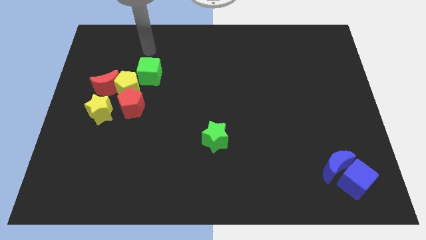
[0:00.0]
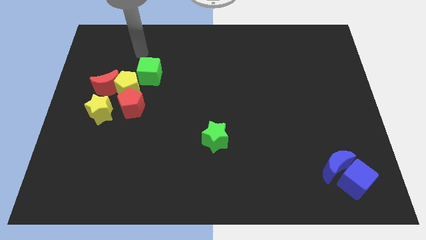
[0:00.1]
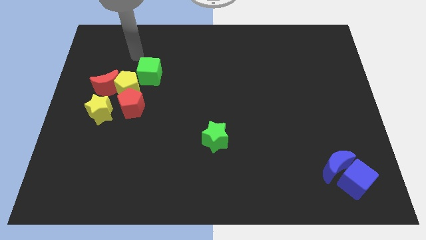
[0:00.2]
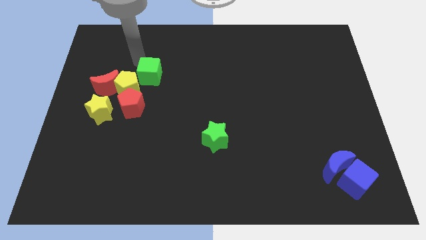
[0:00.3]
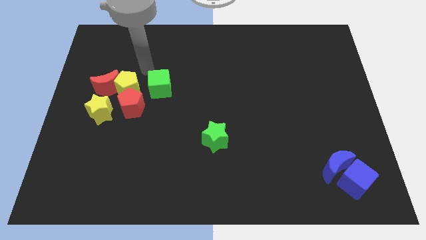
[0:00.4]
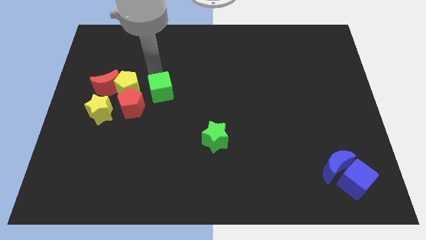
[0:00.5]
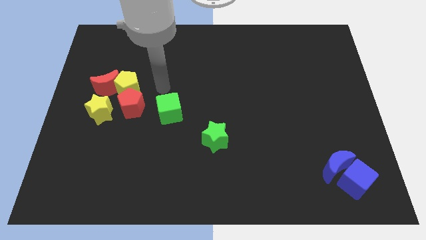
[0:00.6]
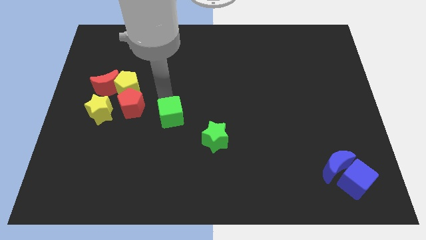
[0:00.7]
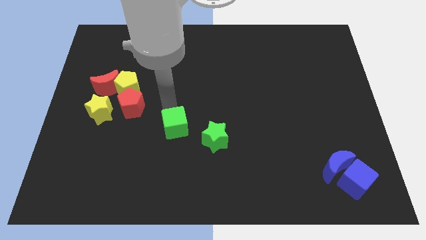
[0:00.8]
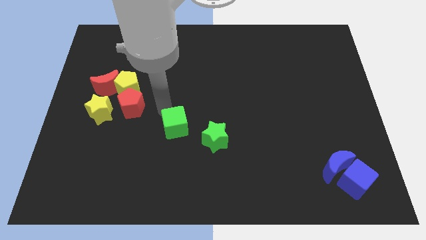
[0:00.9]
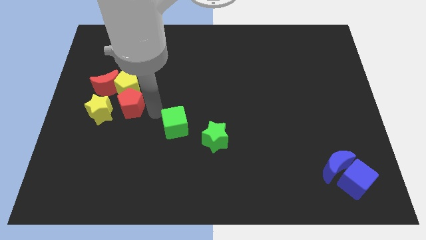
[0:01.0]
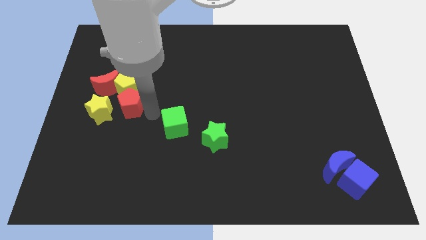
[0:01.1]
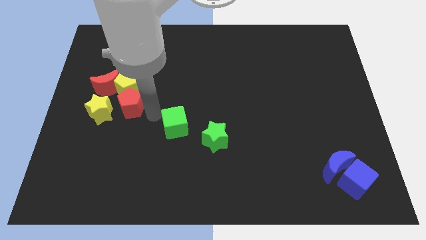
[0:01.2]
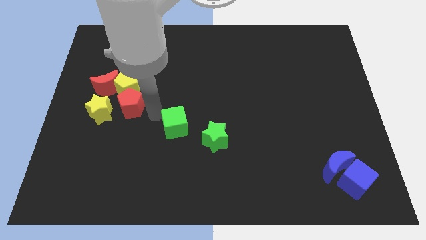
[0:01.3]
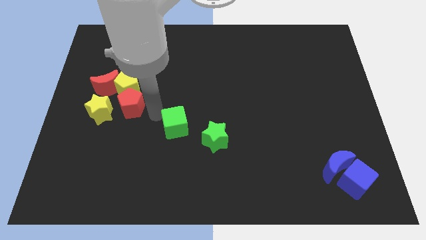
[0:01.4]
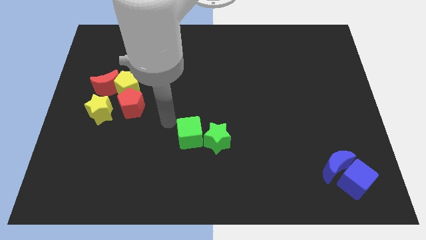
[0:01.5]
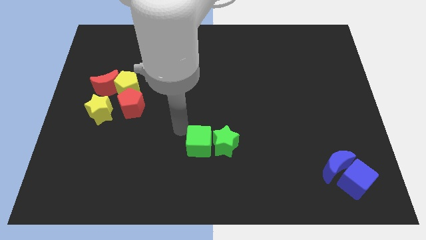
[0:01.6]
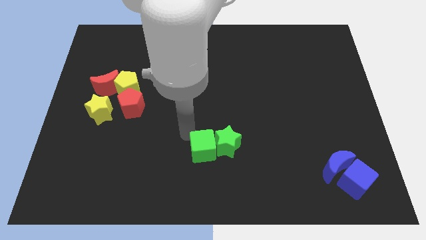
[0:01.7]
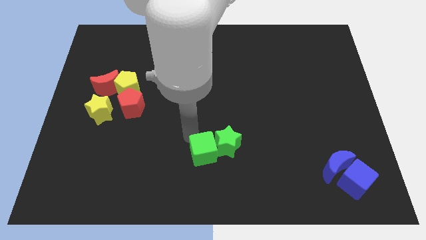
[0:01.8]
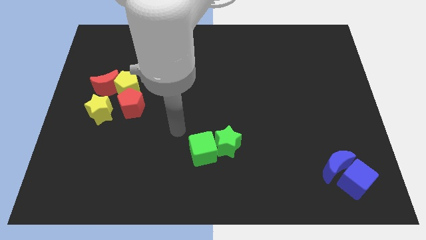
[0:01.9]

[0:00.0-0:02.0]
push green cube into the green star

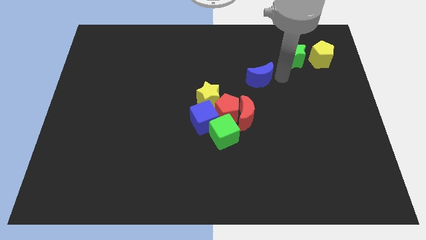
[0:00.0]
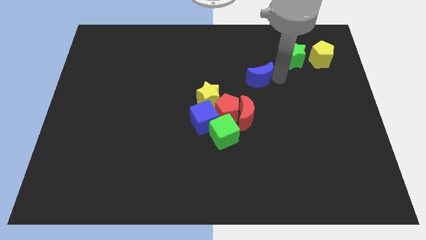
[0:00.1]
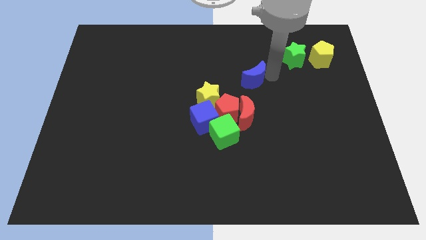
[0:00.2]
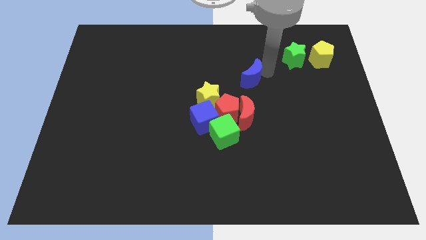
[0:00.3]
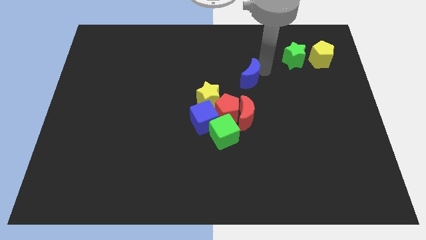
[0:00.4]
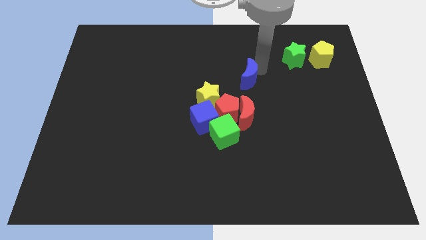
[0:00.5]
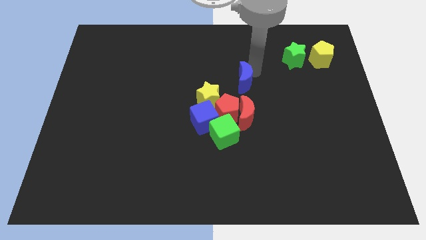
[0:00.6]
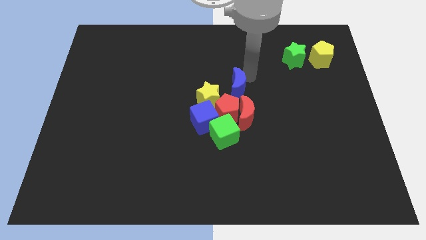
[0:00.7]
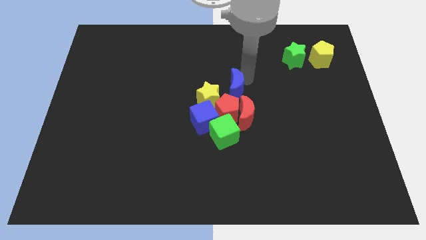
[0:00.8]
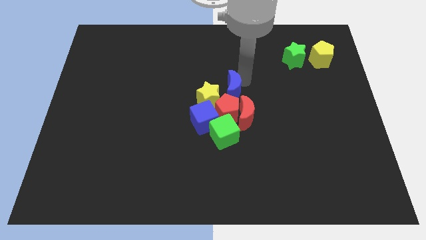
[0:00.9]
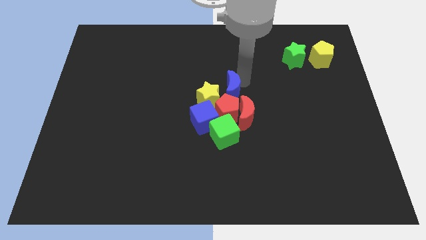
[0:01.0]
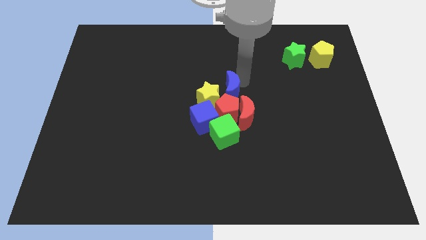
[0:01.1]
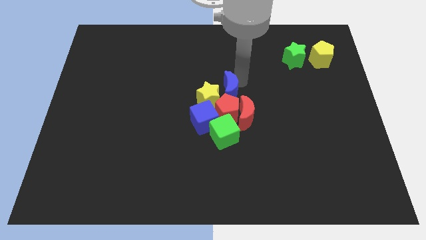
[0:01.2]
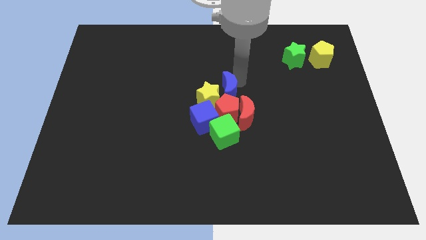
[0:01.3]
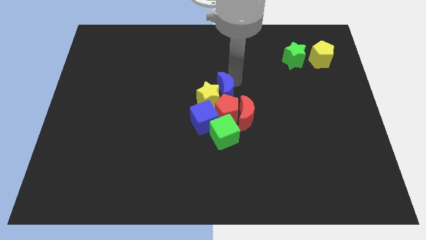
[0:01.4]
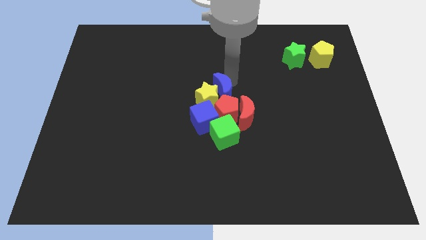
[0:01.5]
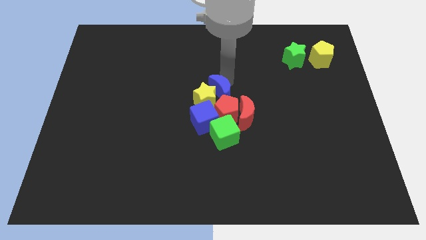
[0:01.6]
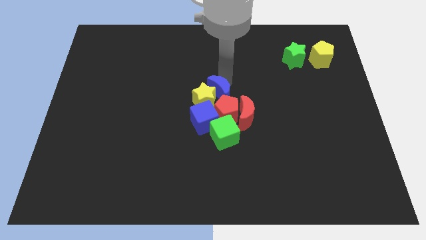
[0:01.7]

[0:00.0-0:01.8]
move the blue crescent towards the group of blocks to the center

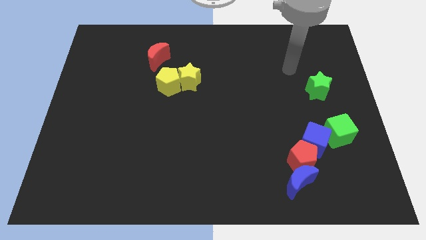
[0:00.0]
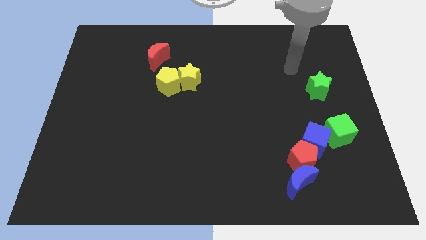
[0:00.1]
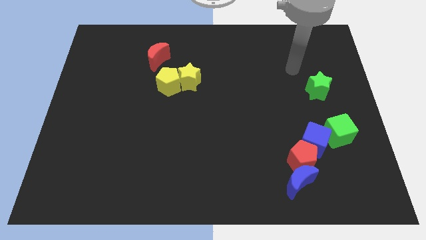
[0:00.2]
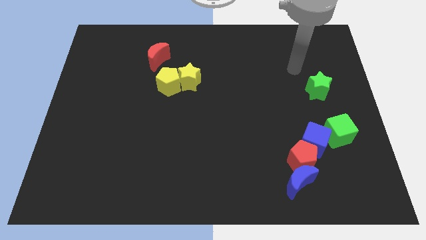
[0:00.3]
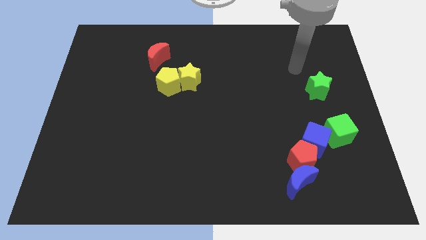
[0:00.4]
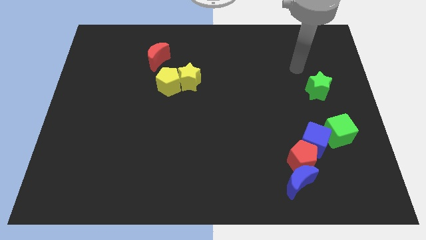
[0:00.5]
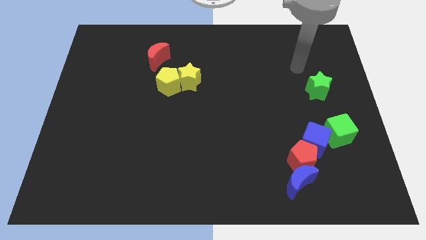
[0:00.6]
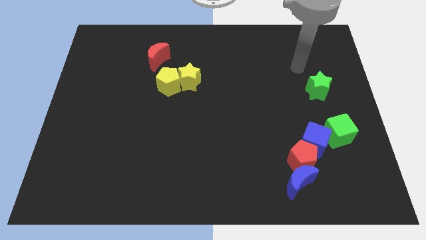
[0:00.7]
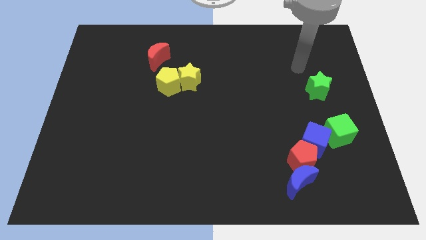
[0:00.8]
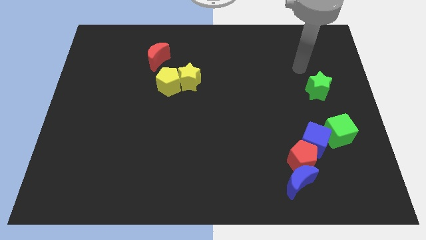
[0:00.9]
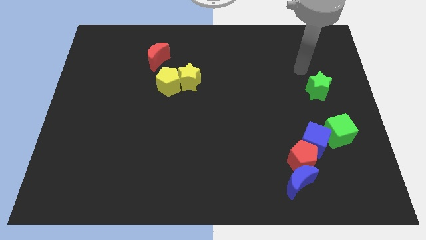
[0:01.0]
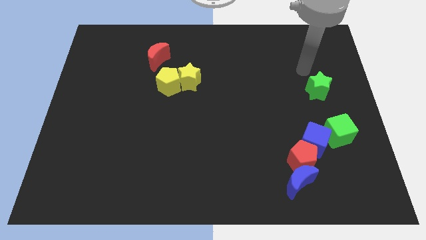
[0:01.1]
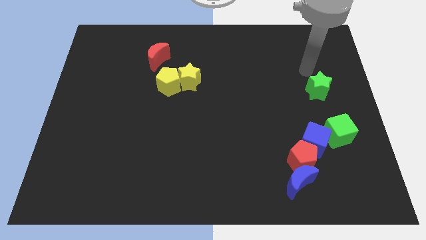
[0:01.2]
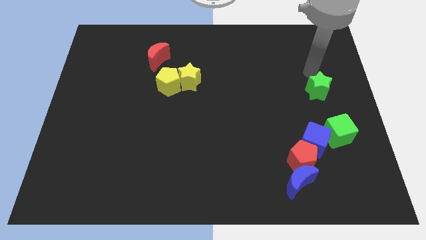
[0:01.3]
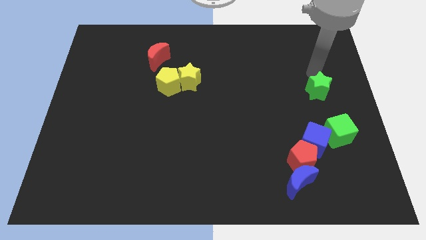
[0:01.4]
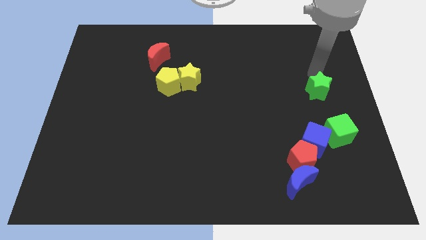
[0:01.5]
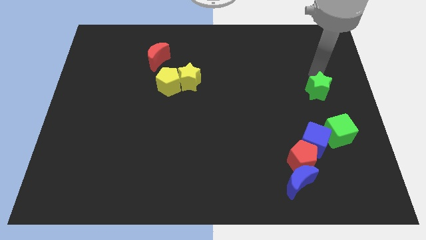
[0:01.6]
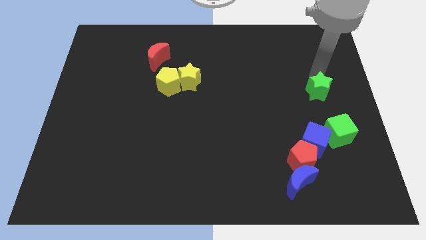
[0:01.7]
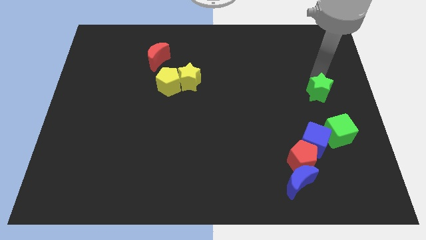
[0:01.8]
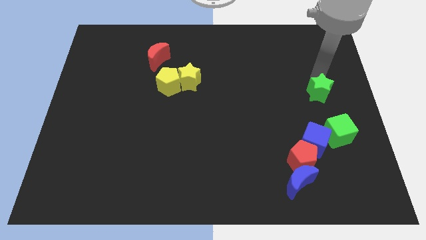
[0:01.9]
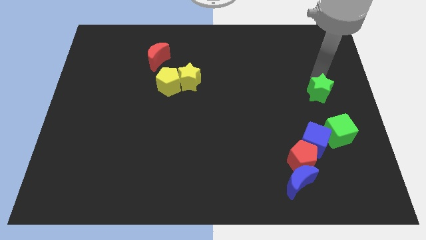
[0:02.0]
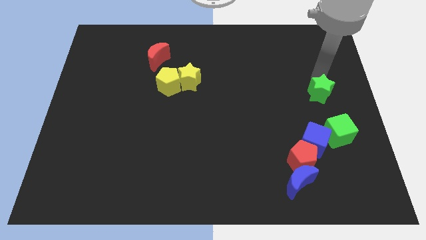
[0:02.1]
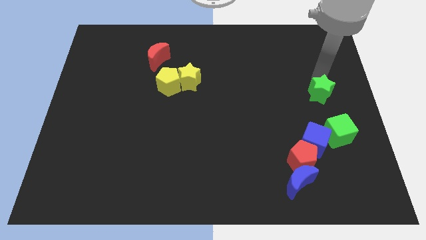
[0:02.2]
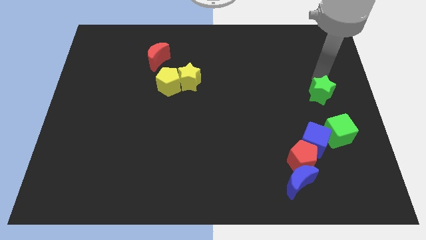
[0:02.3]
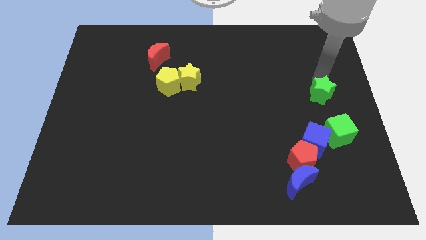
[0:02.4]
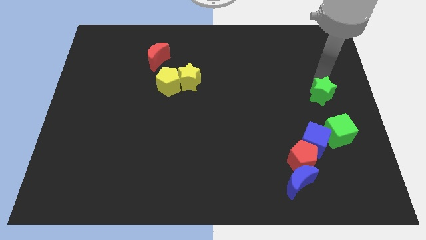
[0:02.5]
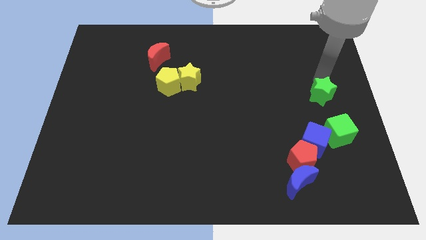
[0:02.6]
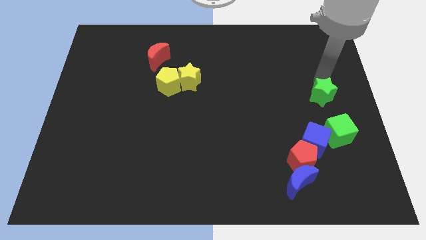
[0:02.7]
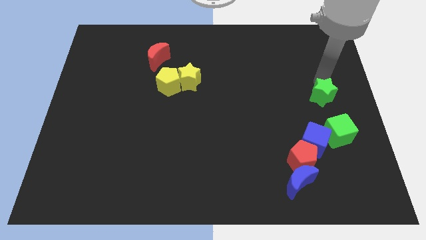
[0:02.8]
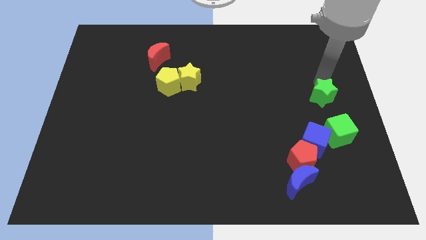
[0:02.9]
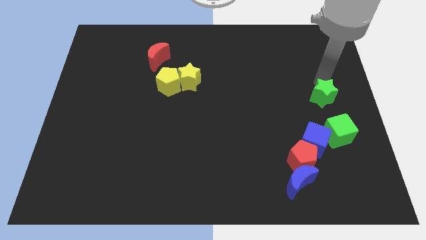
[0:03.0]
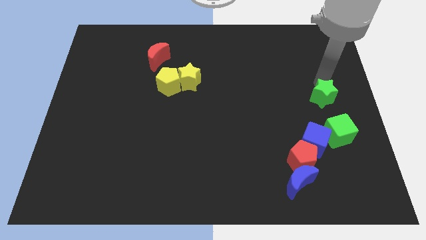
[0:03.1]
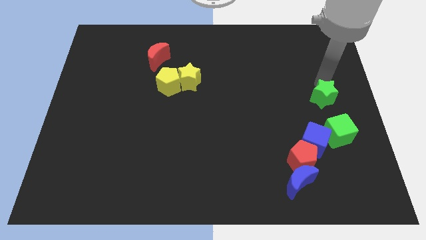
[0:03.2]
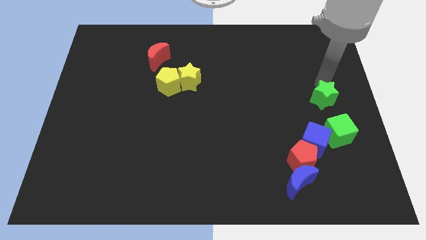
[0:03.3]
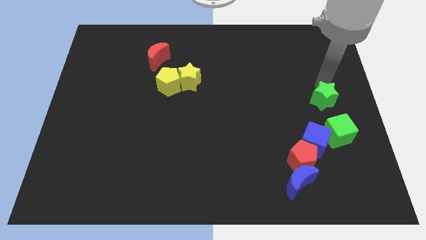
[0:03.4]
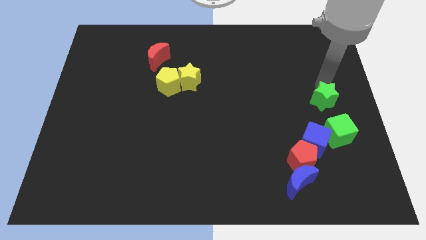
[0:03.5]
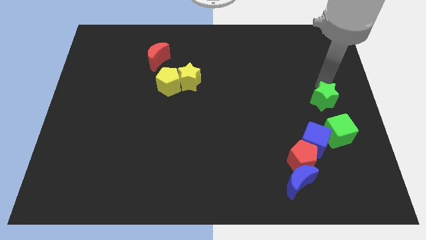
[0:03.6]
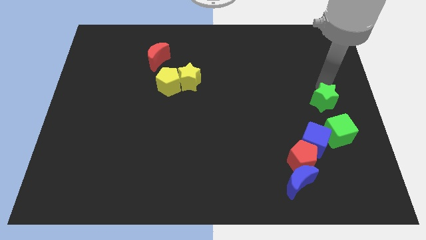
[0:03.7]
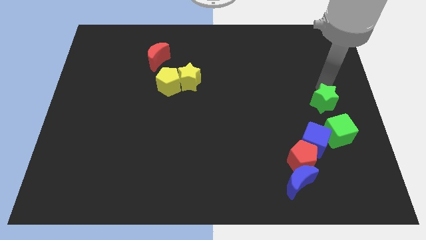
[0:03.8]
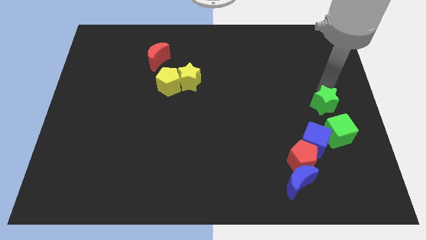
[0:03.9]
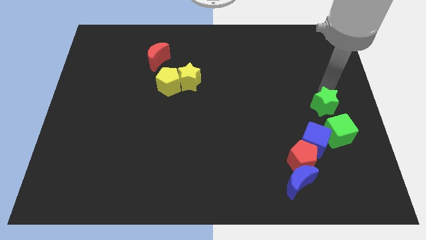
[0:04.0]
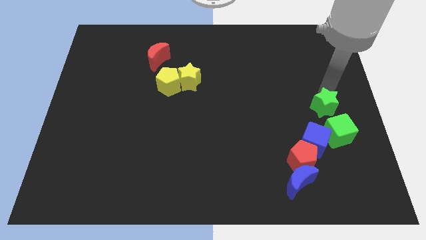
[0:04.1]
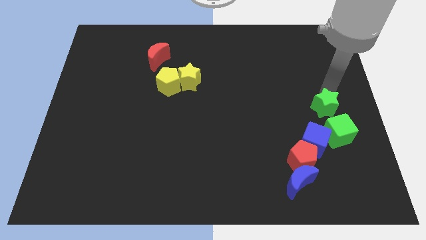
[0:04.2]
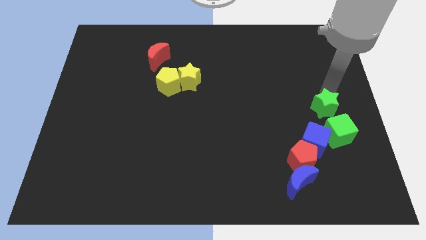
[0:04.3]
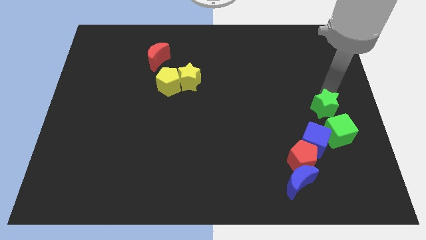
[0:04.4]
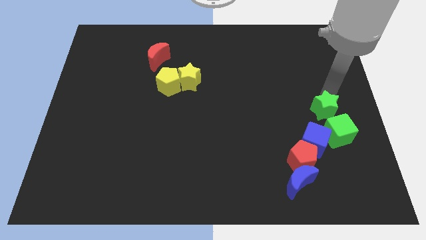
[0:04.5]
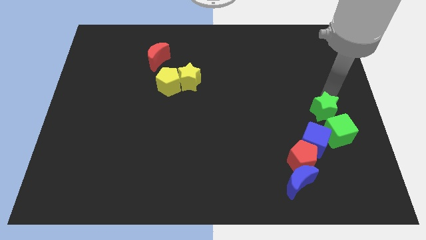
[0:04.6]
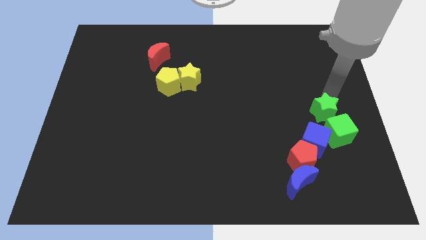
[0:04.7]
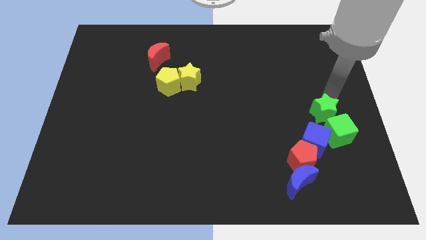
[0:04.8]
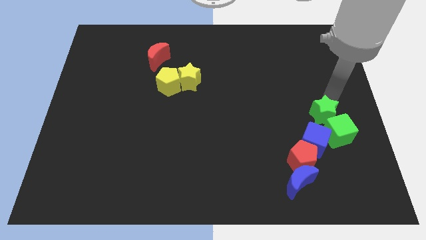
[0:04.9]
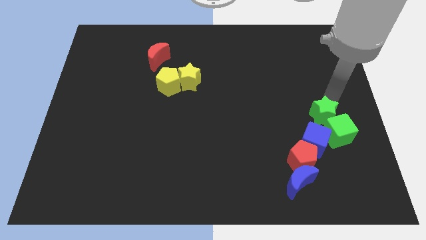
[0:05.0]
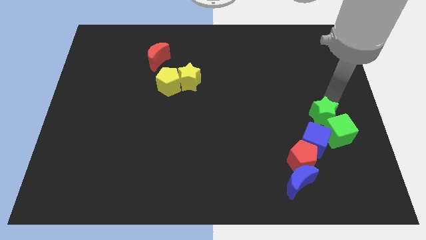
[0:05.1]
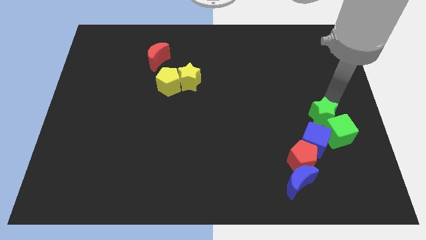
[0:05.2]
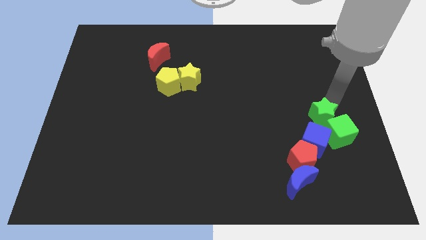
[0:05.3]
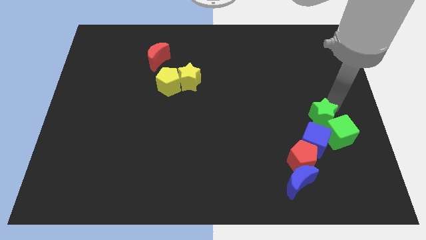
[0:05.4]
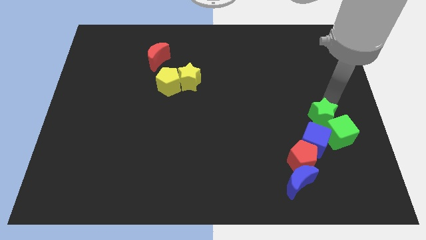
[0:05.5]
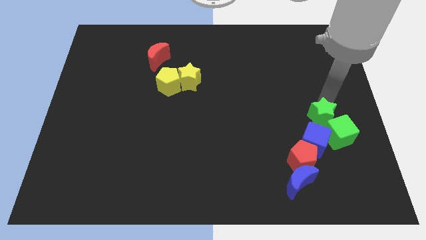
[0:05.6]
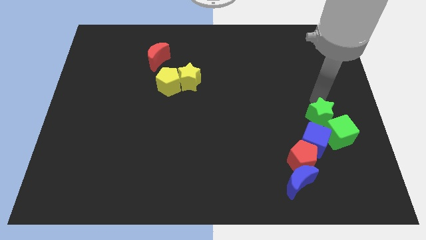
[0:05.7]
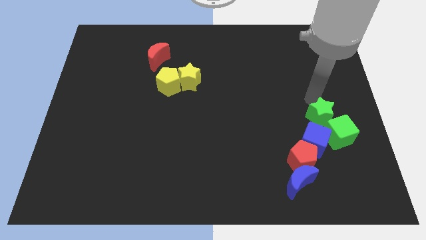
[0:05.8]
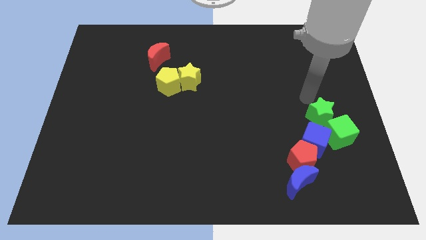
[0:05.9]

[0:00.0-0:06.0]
push the green star to the top of the blue cube
